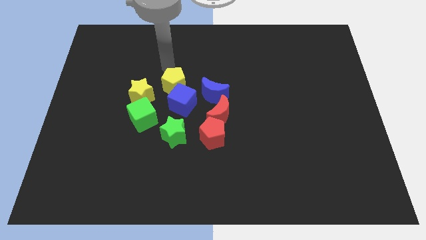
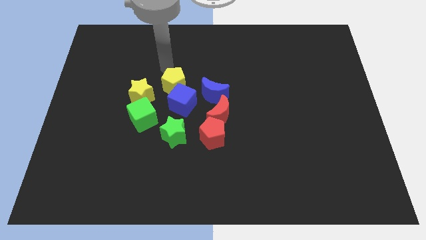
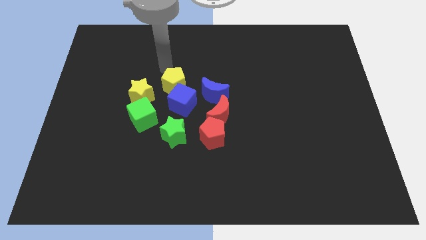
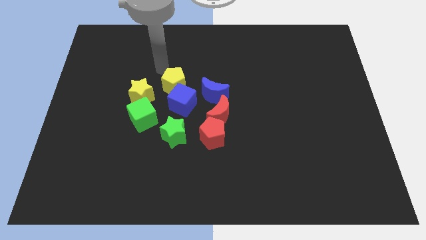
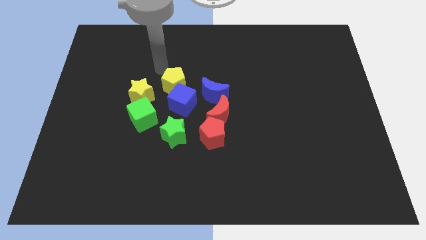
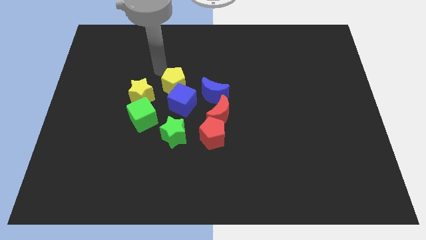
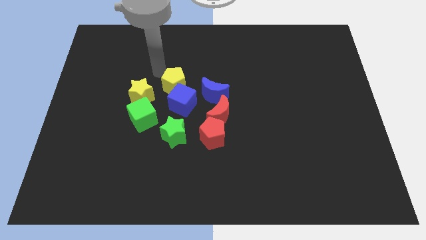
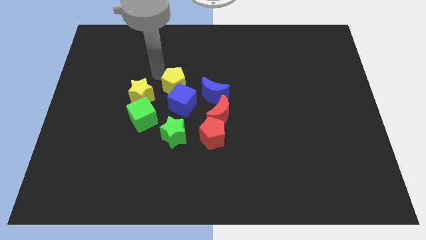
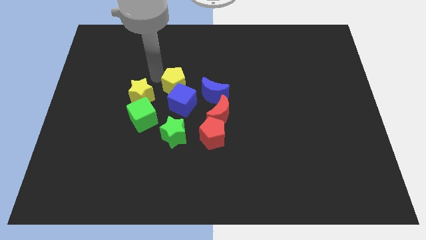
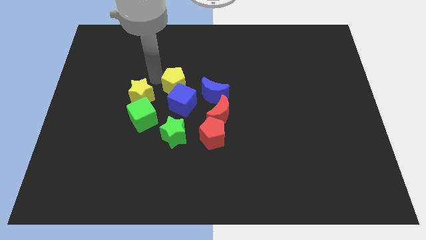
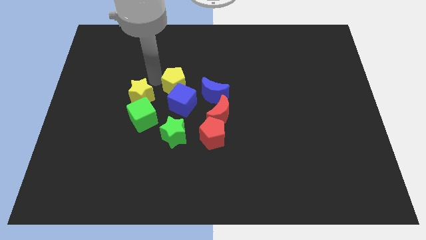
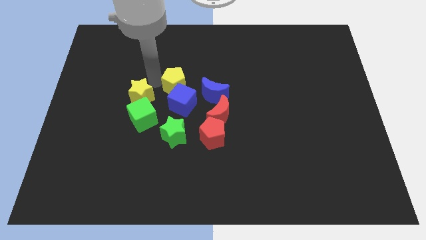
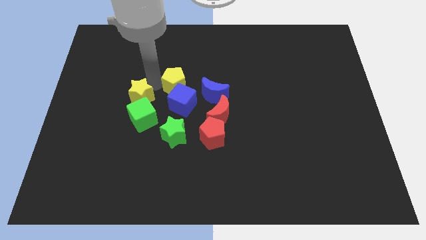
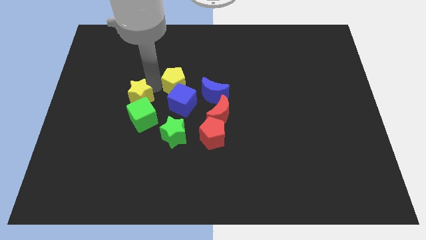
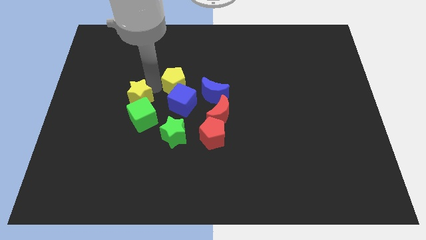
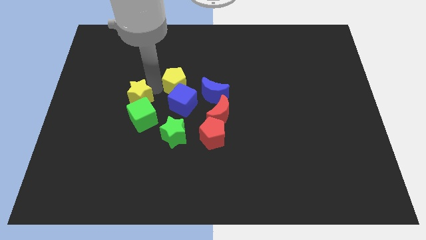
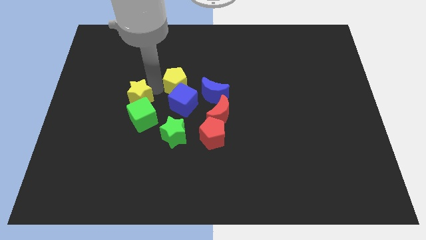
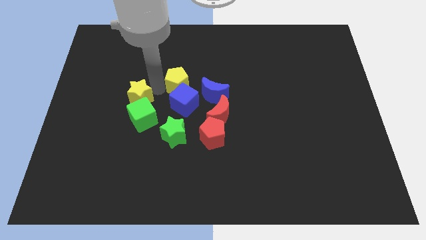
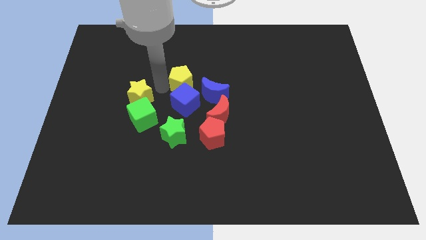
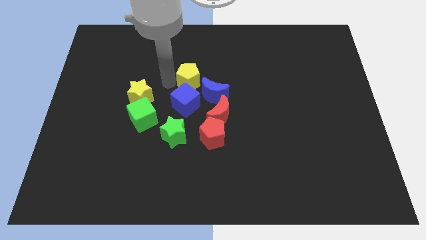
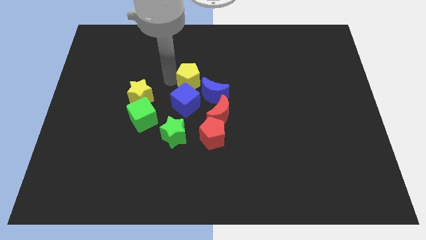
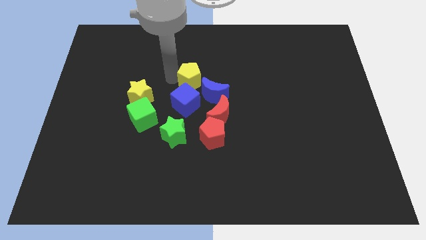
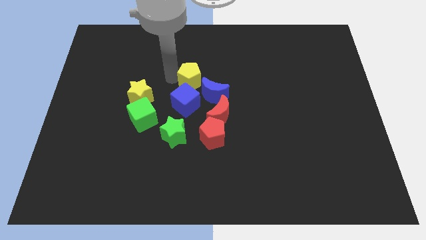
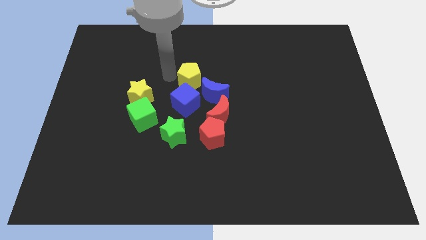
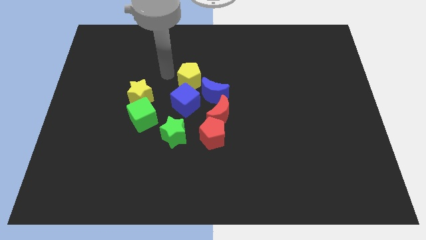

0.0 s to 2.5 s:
slide the yellow pentagon slightly to the right

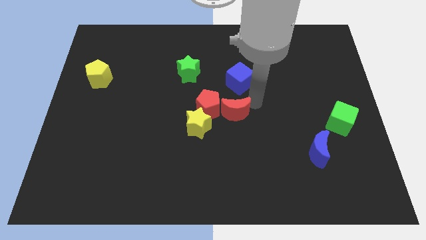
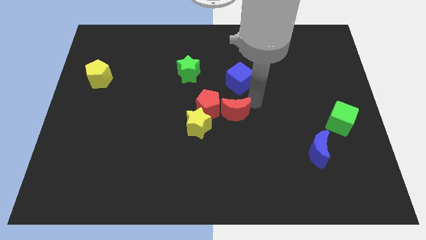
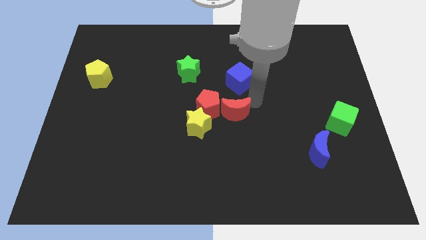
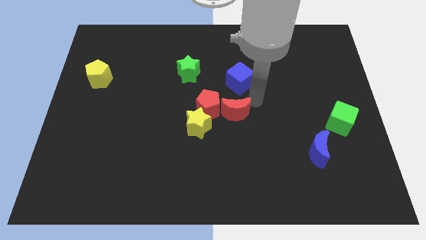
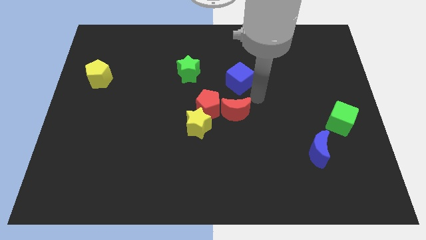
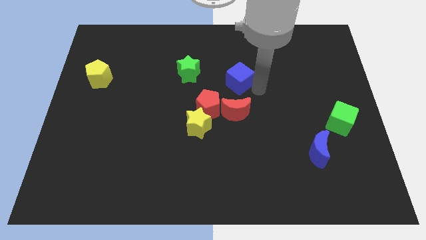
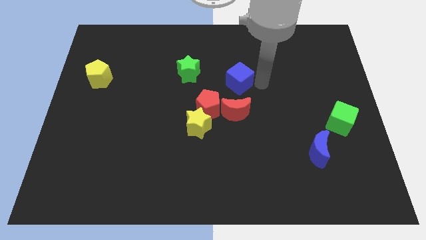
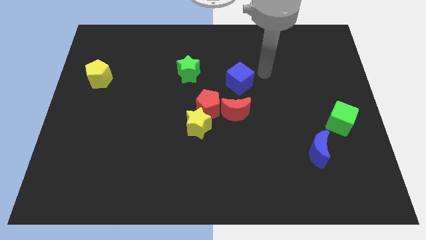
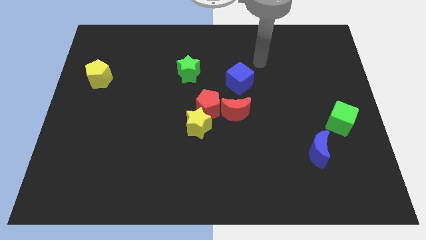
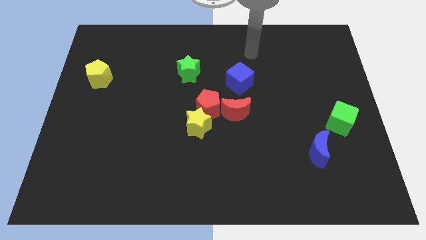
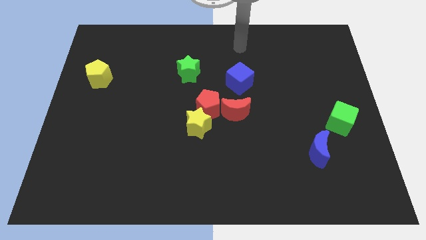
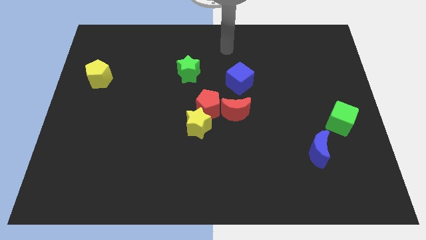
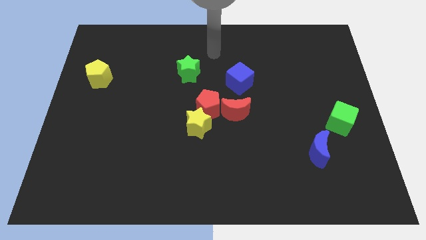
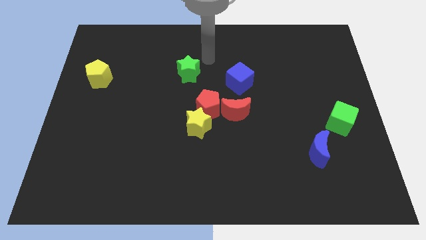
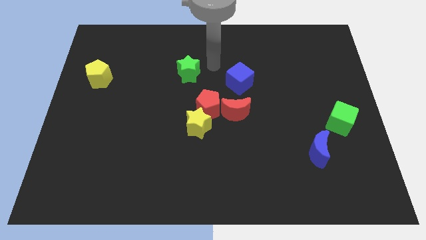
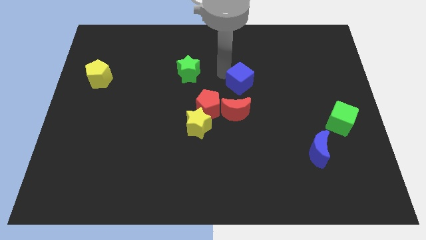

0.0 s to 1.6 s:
move your arm to the left side of blue cube

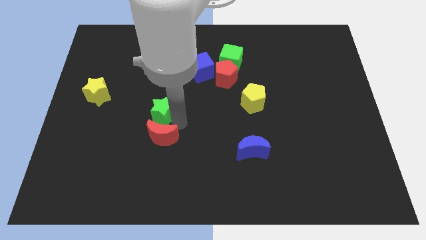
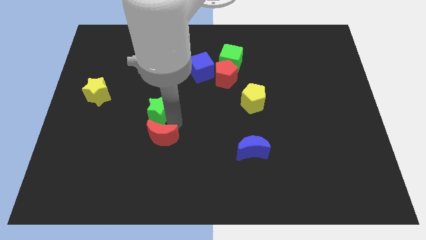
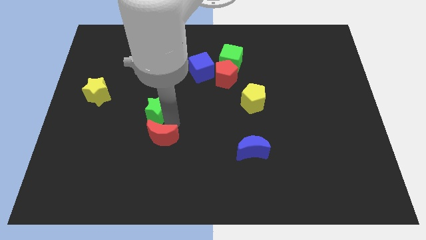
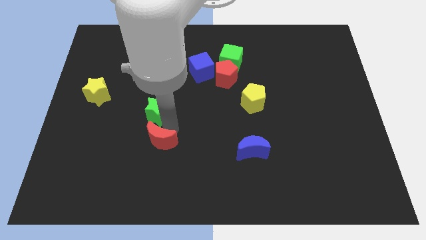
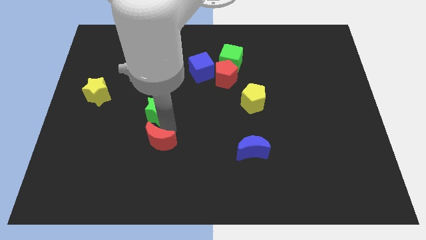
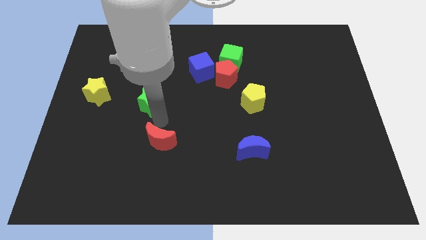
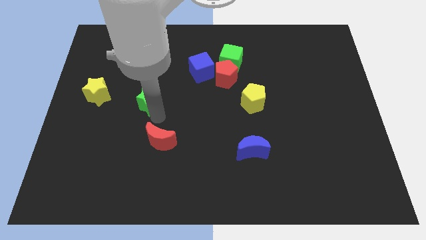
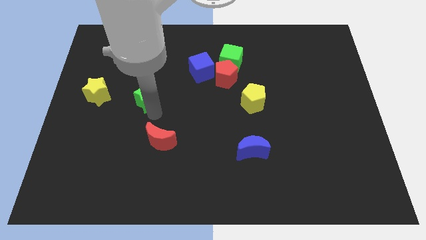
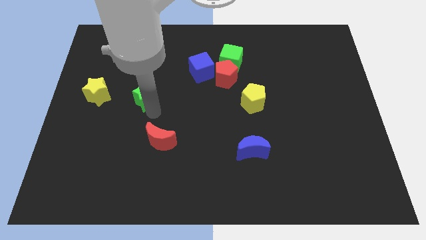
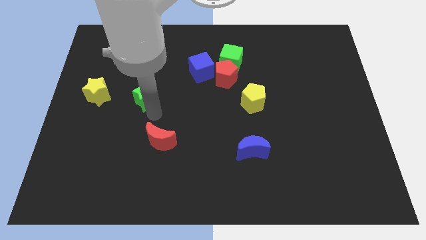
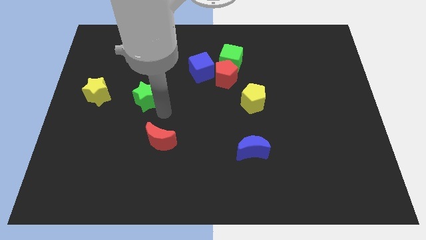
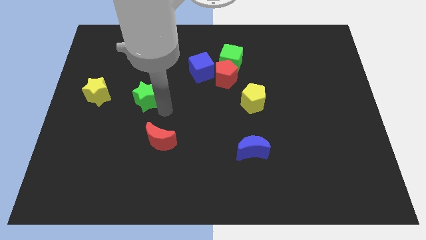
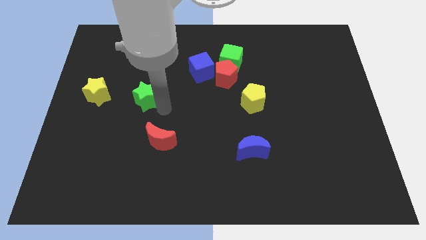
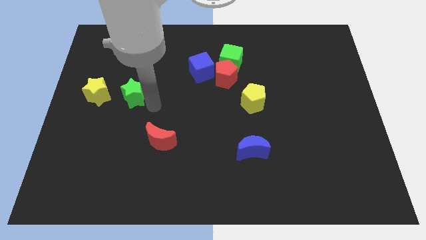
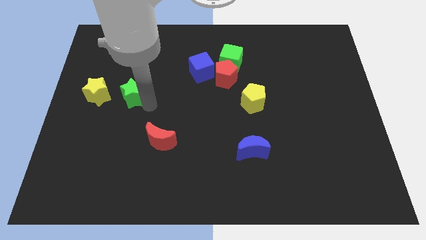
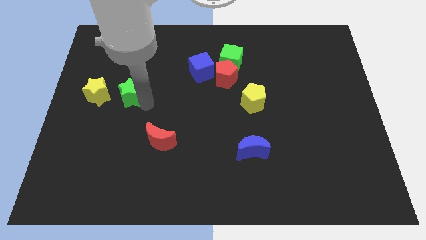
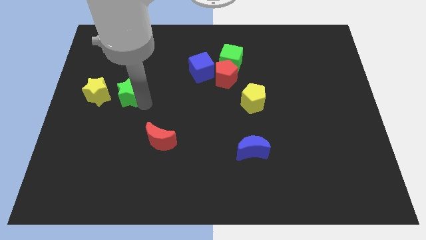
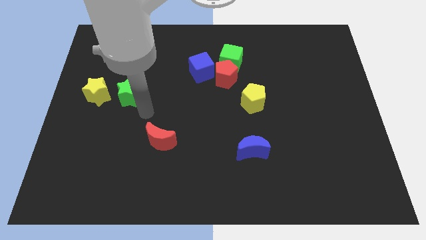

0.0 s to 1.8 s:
move the green star to the right side of the yellow star

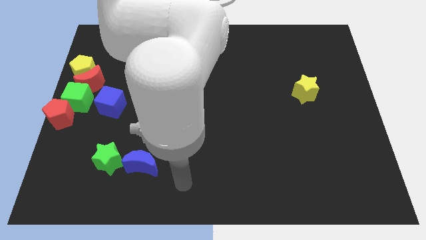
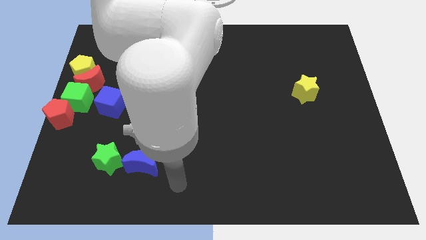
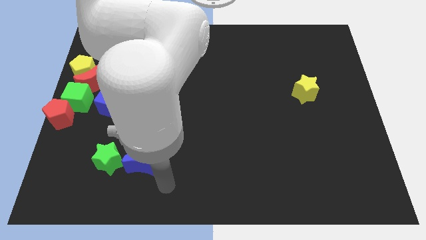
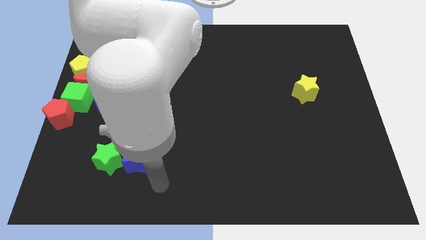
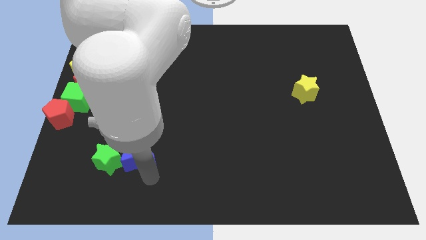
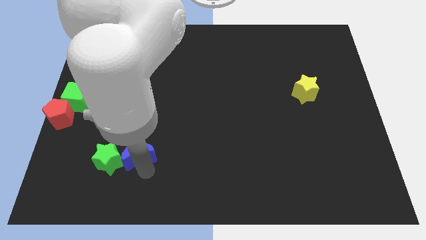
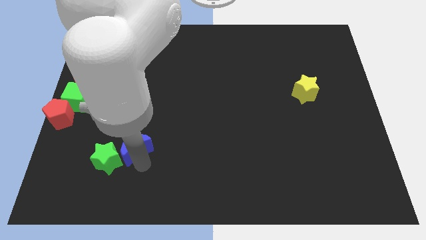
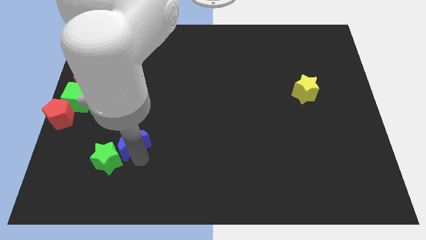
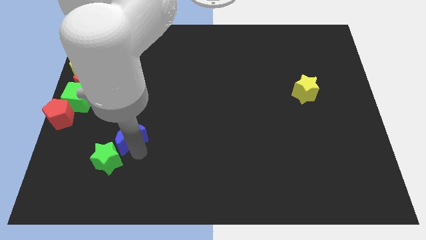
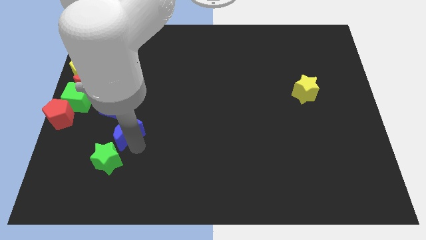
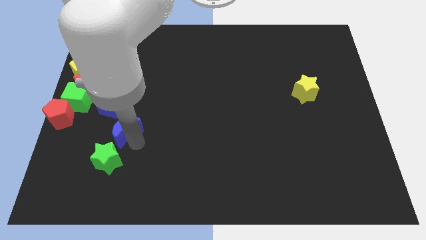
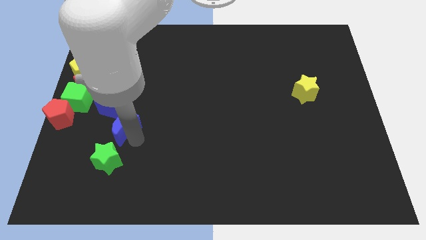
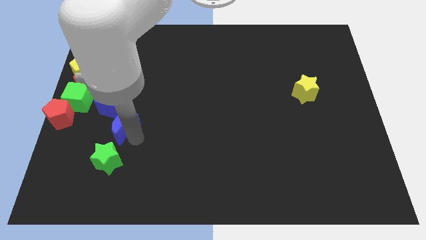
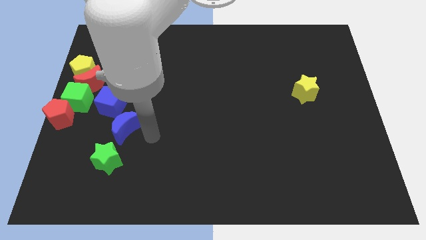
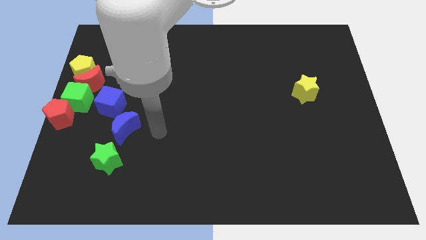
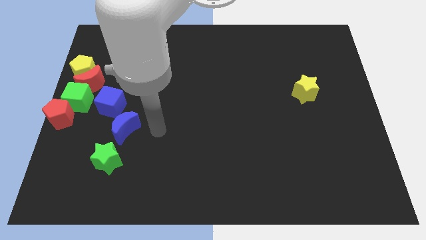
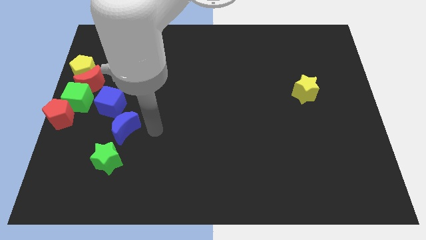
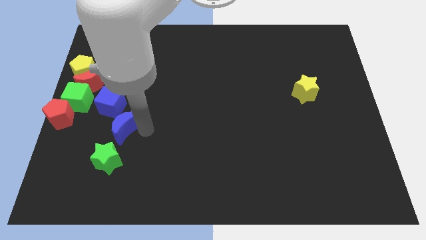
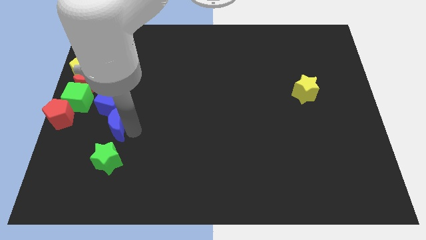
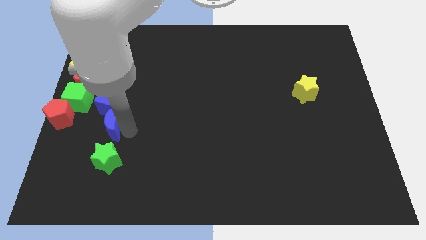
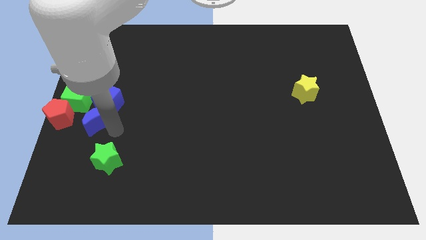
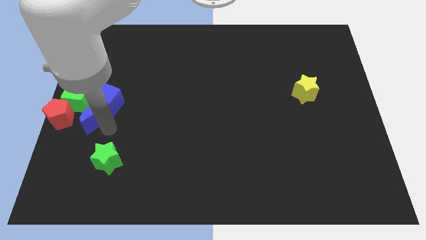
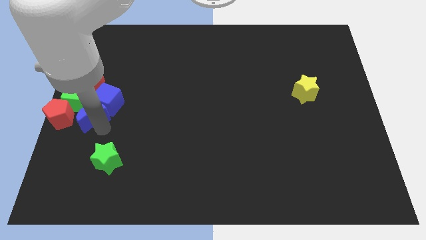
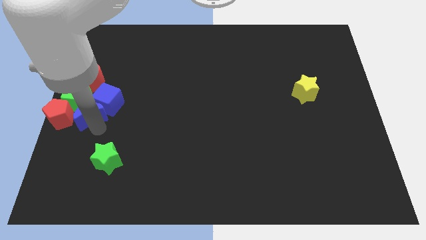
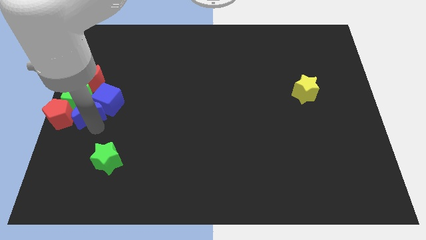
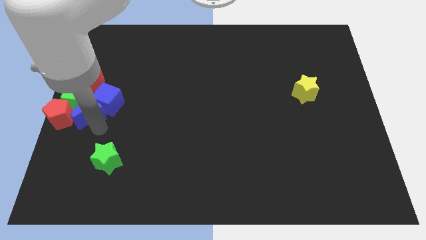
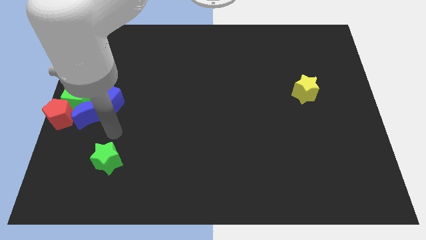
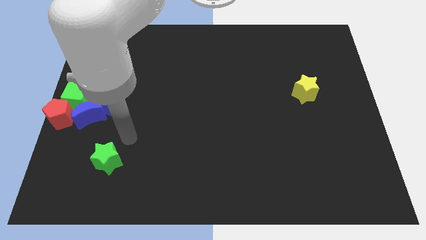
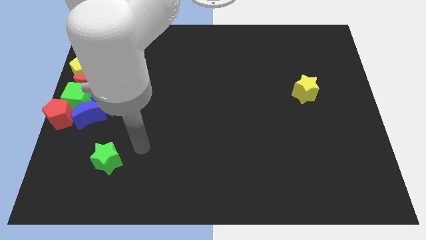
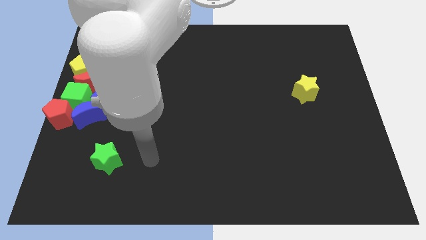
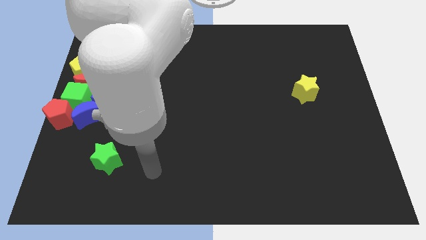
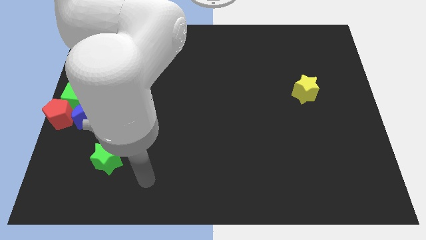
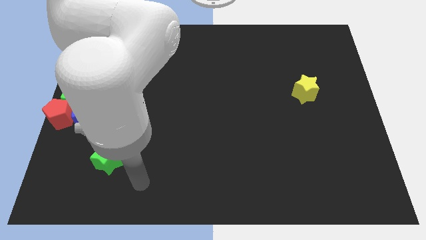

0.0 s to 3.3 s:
move the blue moon to the right of the red pentagon
